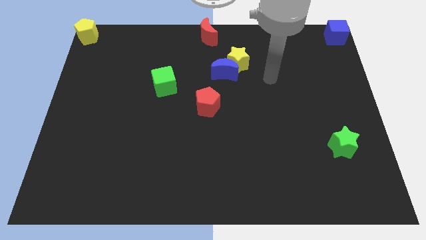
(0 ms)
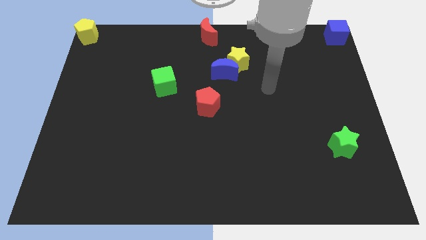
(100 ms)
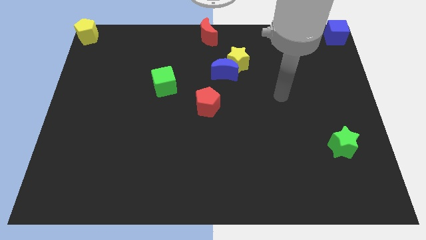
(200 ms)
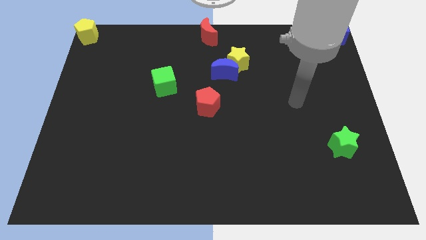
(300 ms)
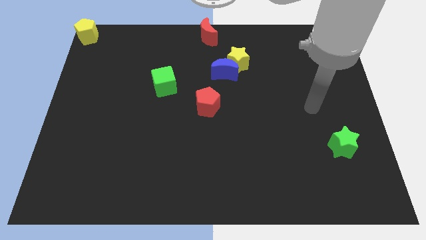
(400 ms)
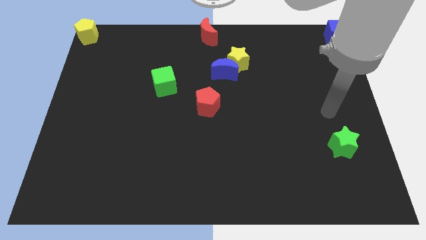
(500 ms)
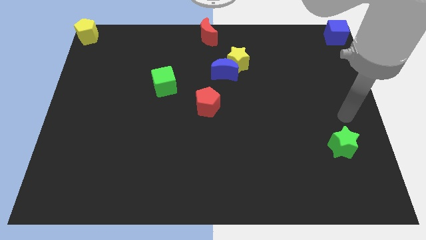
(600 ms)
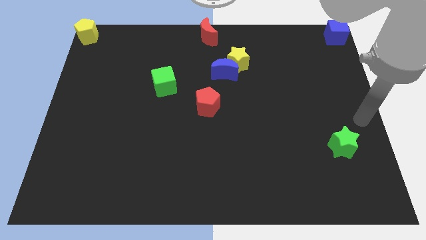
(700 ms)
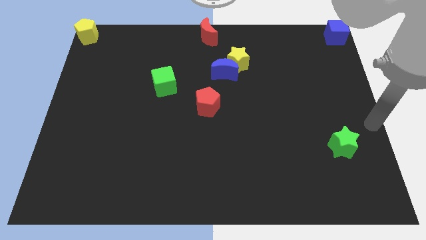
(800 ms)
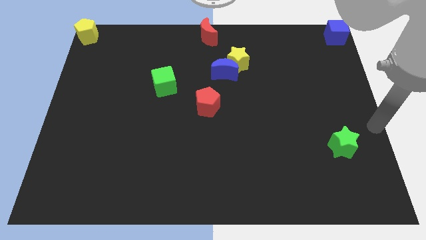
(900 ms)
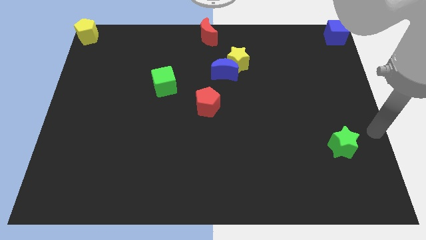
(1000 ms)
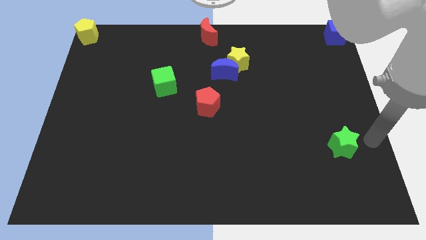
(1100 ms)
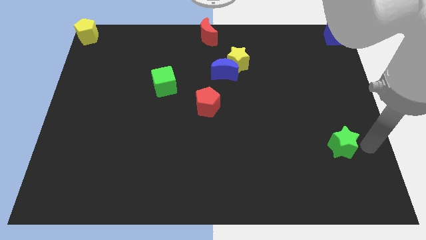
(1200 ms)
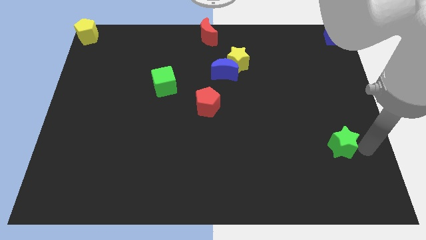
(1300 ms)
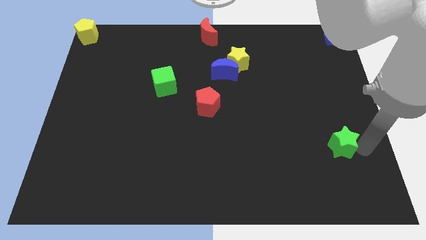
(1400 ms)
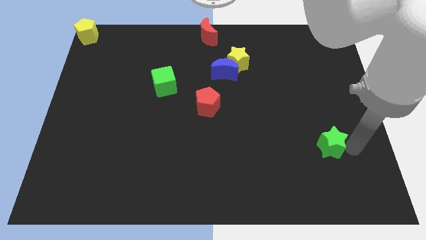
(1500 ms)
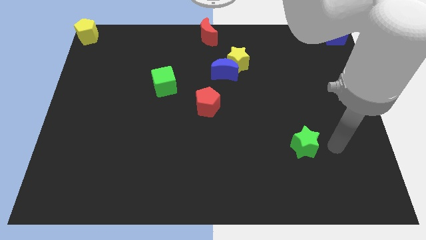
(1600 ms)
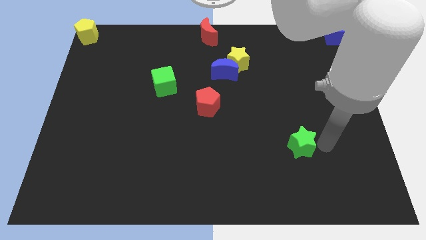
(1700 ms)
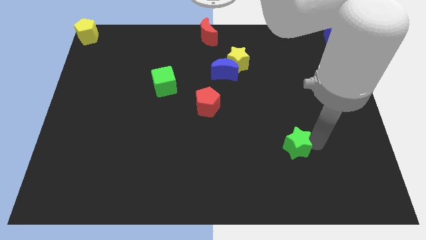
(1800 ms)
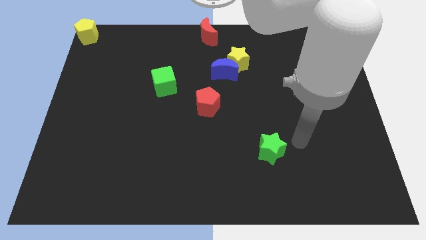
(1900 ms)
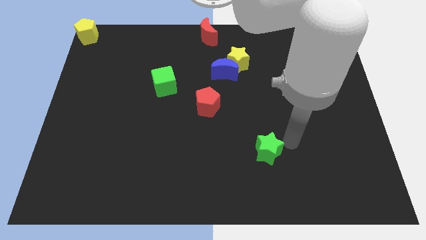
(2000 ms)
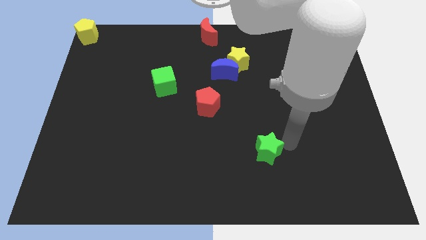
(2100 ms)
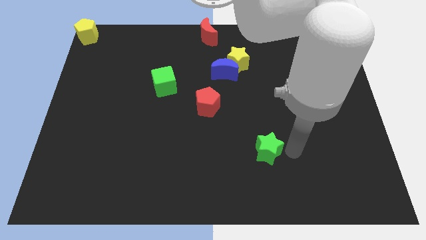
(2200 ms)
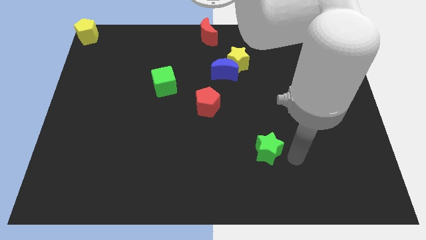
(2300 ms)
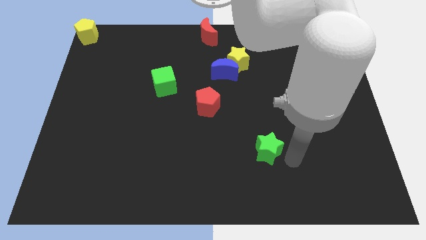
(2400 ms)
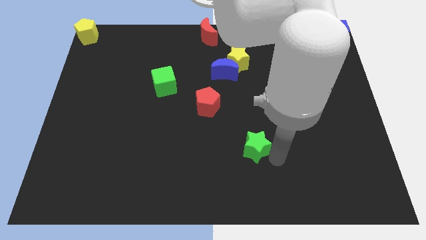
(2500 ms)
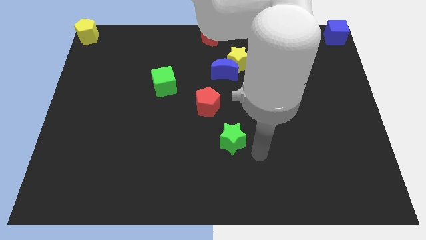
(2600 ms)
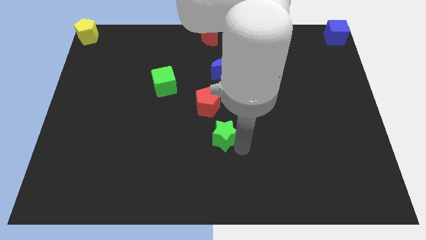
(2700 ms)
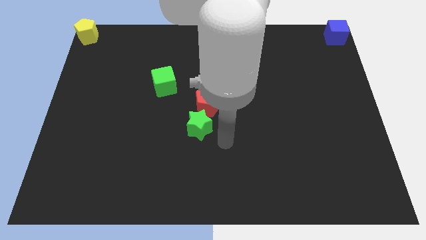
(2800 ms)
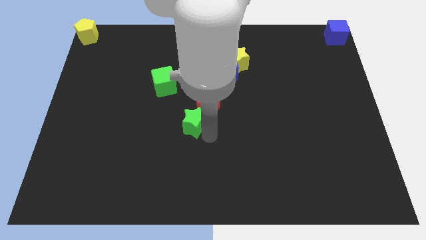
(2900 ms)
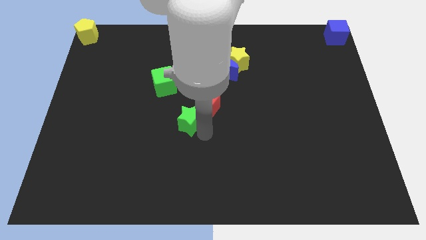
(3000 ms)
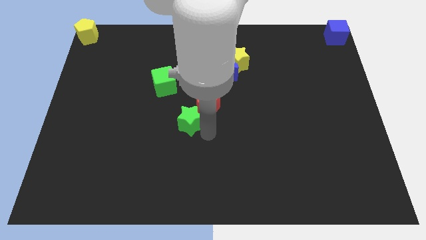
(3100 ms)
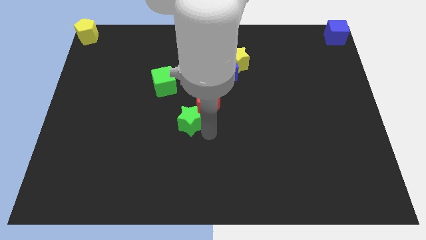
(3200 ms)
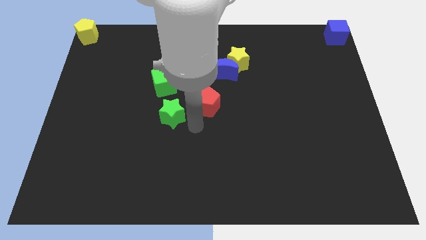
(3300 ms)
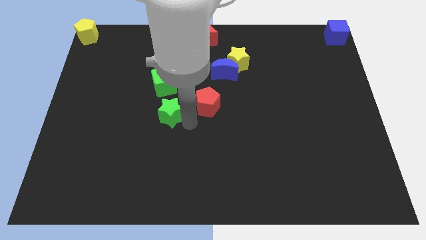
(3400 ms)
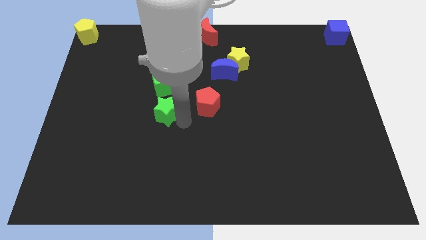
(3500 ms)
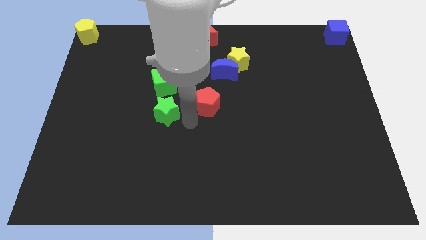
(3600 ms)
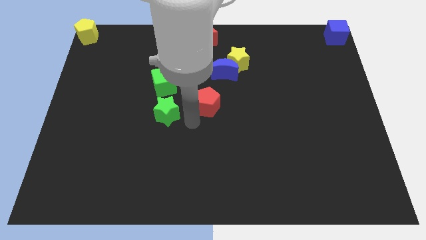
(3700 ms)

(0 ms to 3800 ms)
place the green star under the green cube

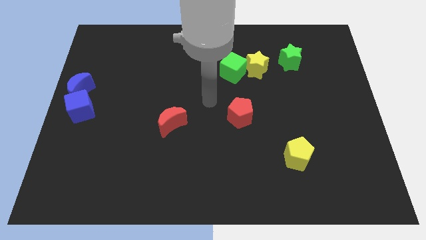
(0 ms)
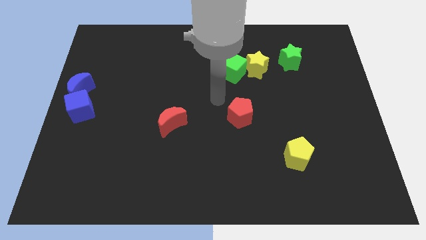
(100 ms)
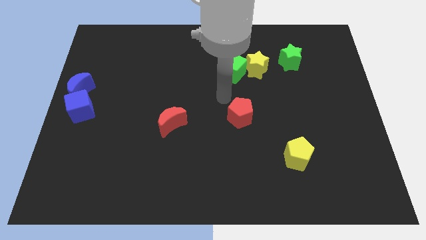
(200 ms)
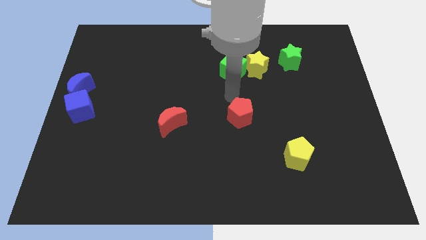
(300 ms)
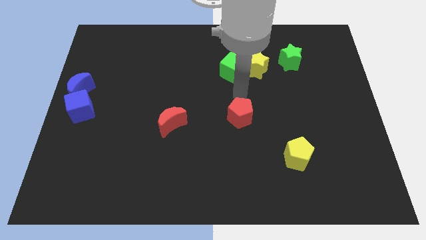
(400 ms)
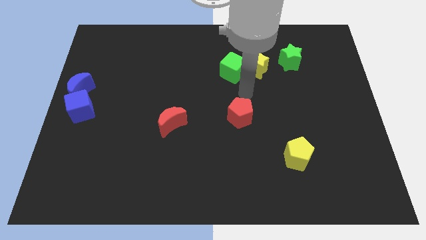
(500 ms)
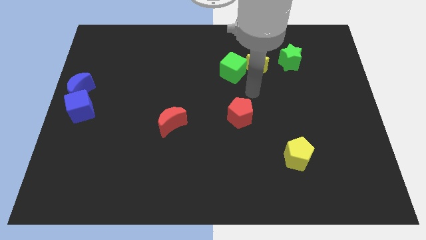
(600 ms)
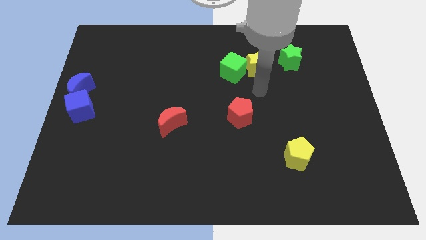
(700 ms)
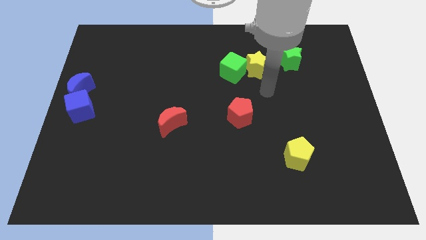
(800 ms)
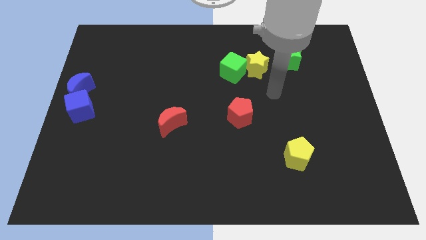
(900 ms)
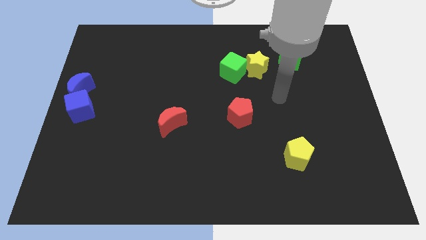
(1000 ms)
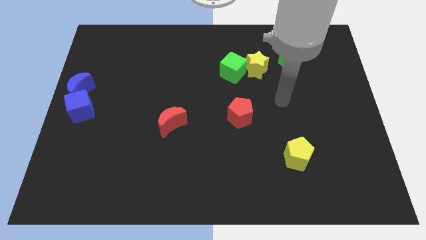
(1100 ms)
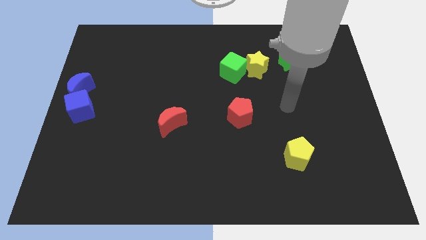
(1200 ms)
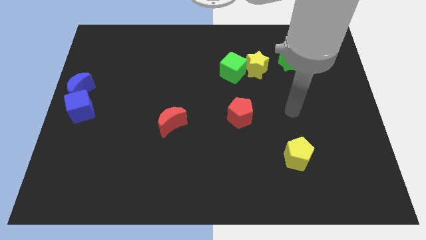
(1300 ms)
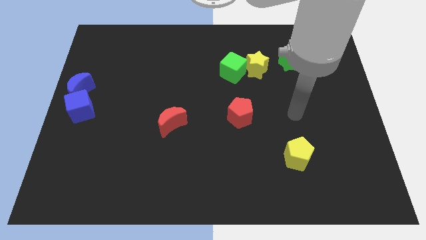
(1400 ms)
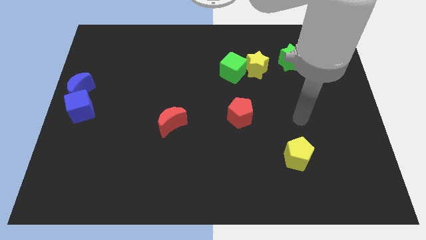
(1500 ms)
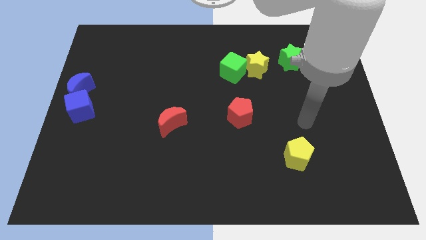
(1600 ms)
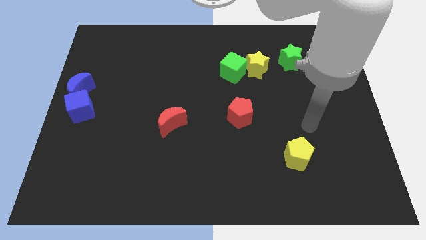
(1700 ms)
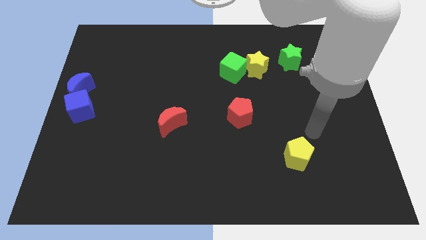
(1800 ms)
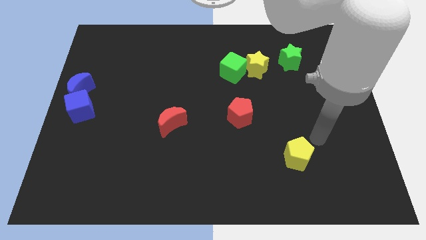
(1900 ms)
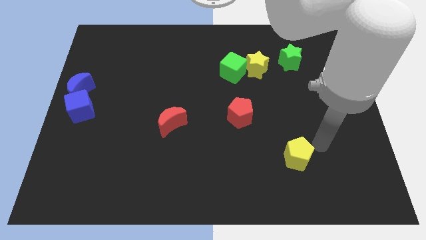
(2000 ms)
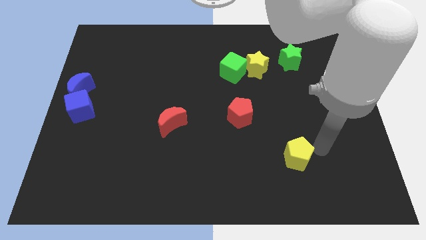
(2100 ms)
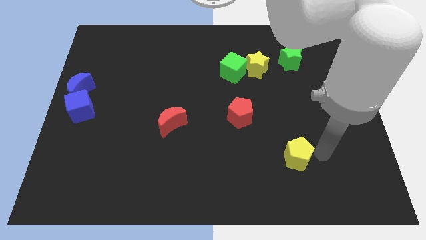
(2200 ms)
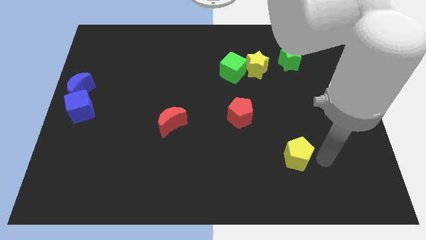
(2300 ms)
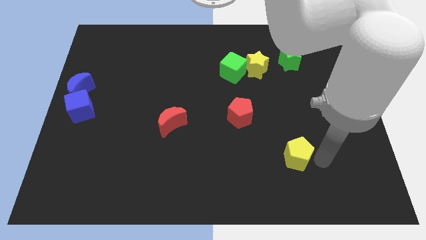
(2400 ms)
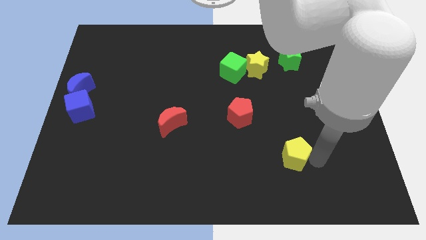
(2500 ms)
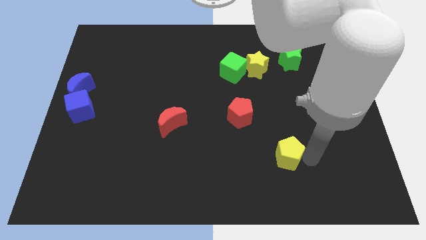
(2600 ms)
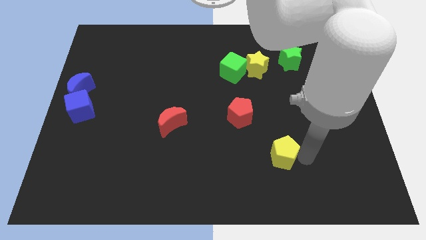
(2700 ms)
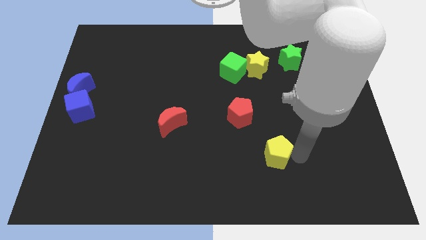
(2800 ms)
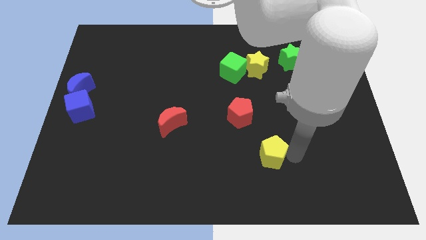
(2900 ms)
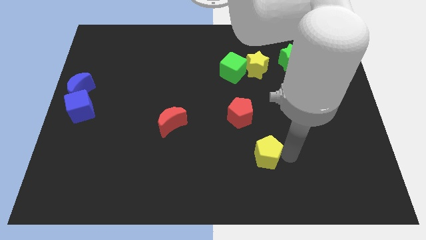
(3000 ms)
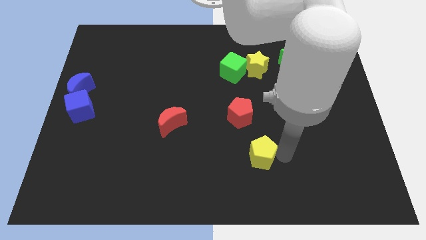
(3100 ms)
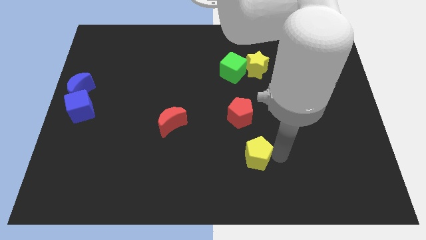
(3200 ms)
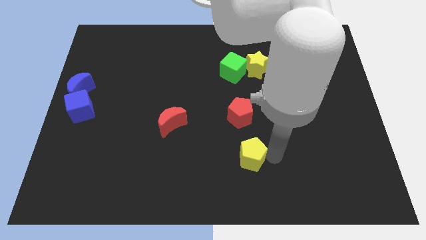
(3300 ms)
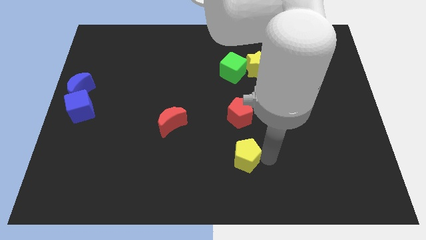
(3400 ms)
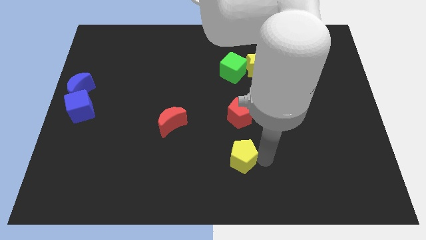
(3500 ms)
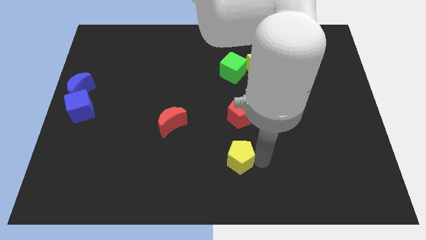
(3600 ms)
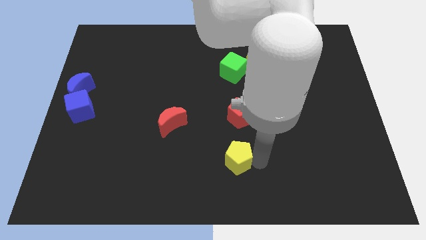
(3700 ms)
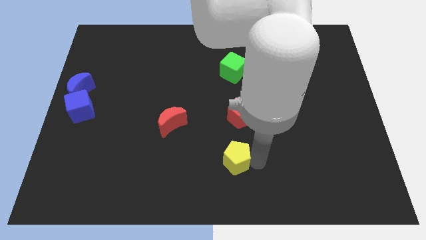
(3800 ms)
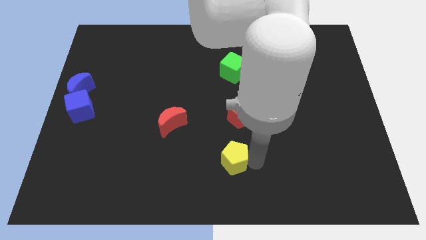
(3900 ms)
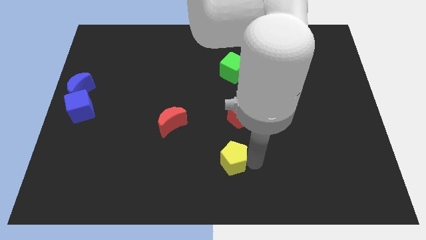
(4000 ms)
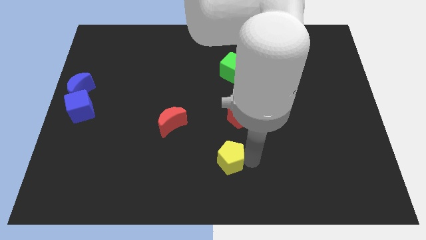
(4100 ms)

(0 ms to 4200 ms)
move the yellow pentagon vertically to the bottom of the red pentagon

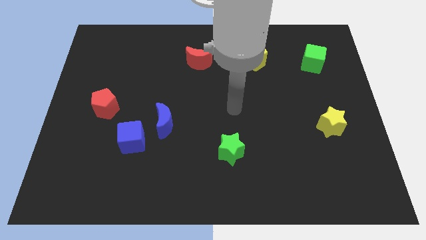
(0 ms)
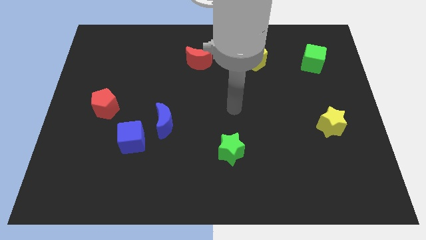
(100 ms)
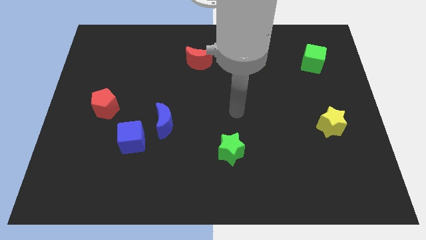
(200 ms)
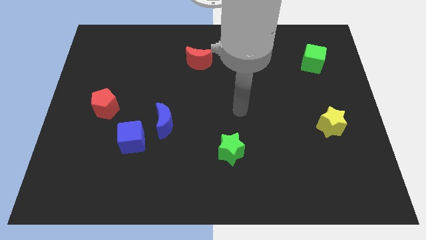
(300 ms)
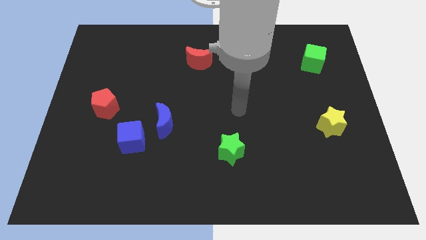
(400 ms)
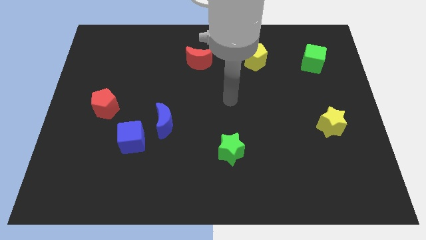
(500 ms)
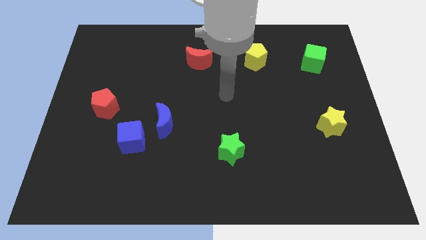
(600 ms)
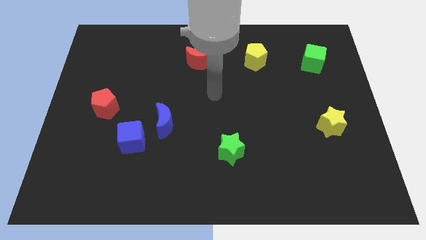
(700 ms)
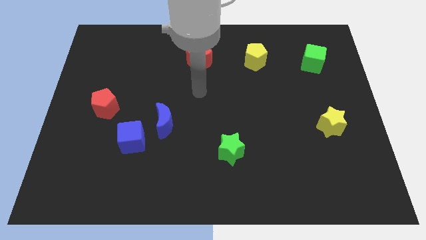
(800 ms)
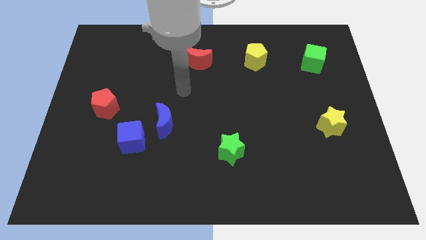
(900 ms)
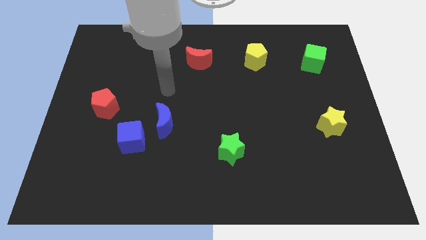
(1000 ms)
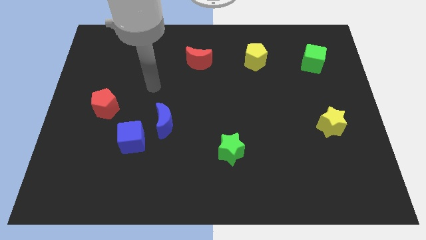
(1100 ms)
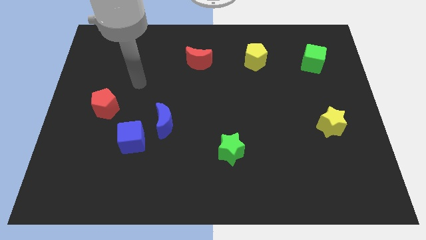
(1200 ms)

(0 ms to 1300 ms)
point your hand above the blue cube
